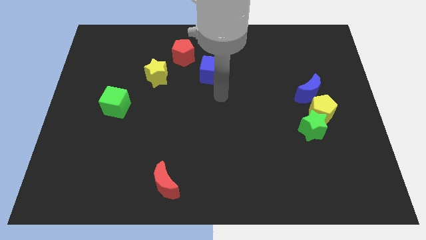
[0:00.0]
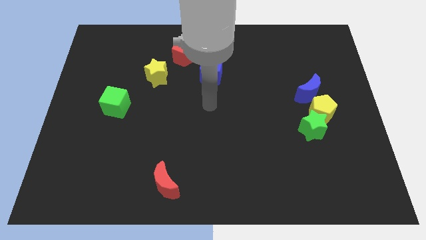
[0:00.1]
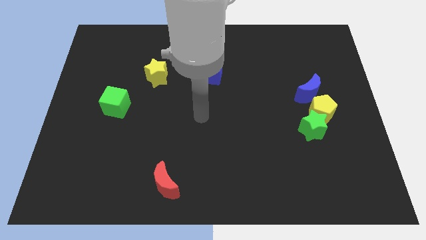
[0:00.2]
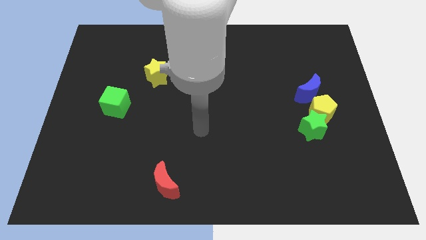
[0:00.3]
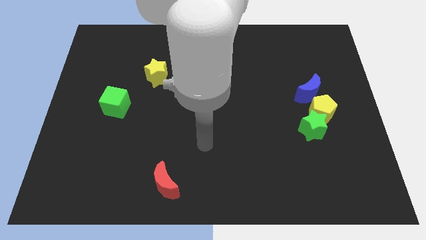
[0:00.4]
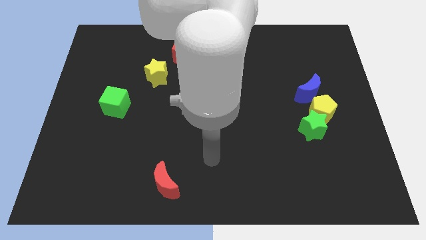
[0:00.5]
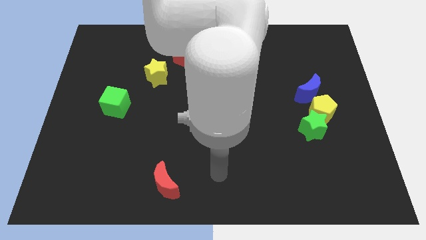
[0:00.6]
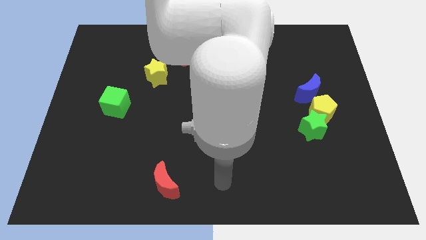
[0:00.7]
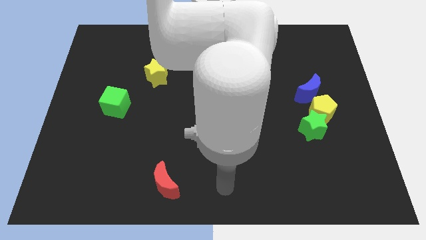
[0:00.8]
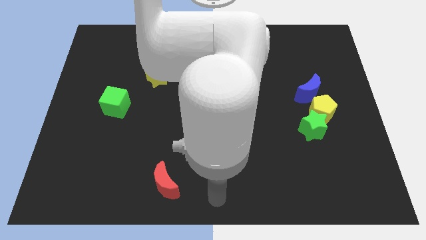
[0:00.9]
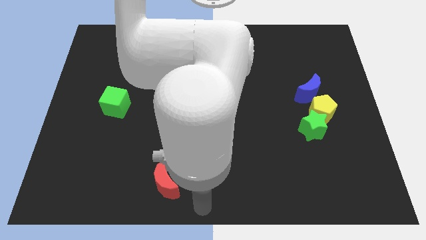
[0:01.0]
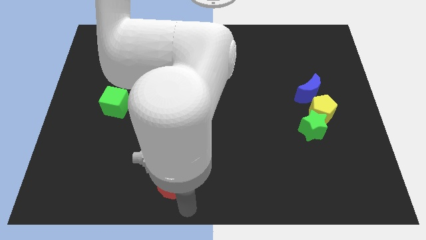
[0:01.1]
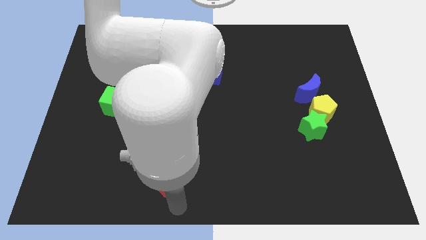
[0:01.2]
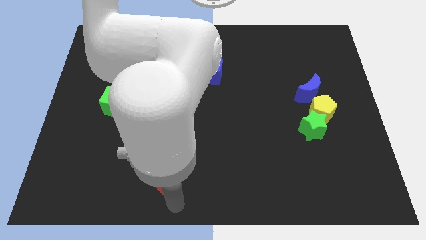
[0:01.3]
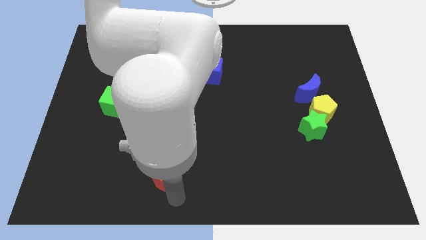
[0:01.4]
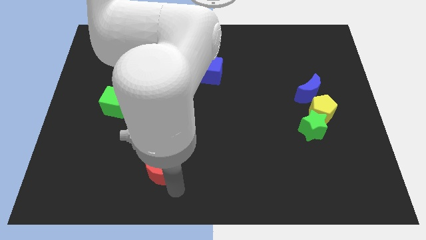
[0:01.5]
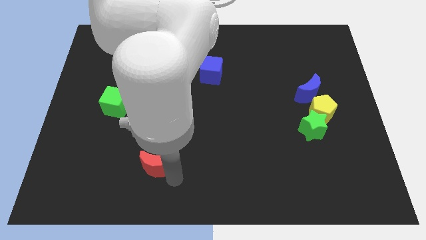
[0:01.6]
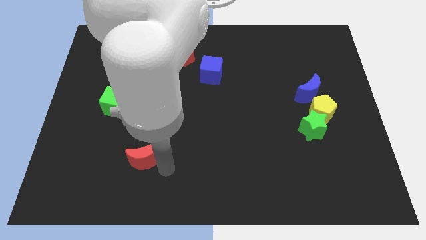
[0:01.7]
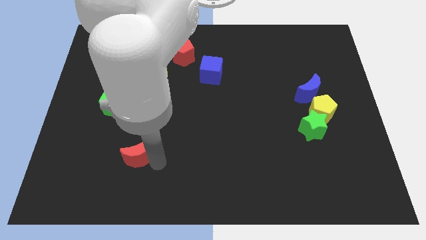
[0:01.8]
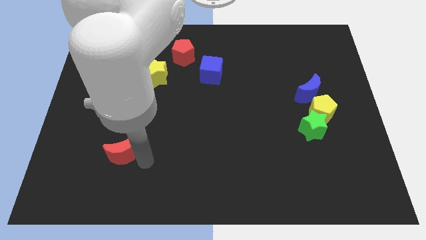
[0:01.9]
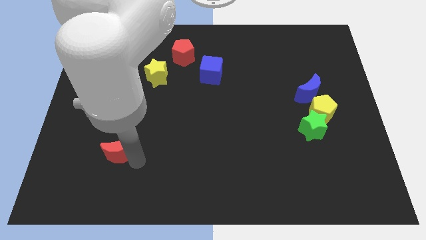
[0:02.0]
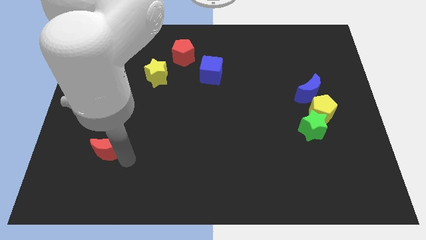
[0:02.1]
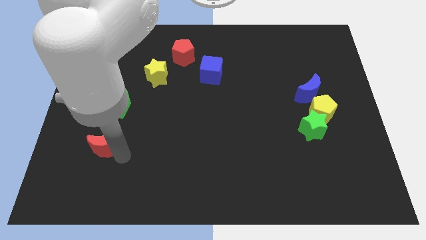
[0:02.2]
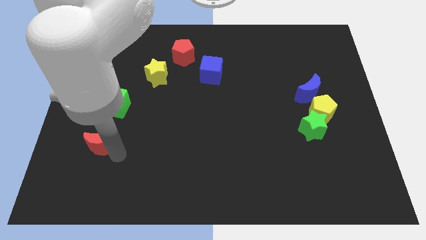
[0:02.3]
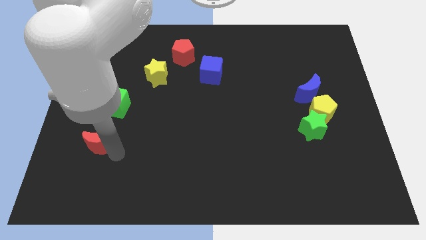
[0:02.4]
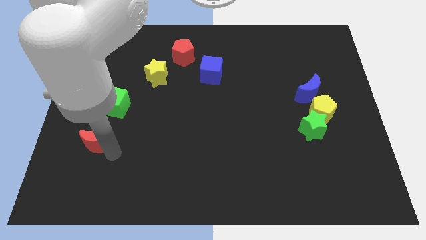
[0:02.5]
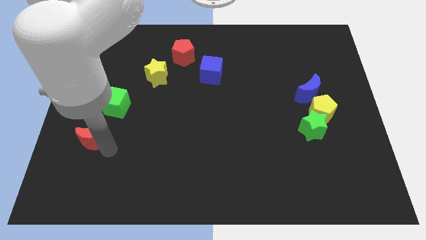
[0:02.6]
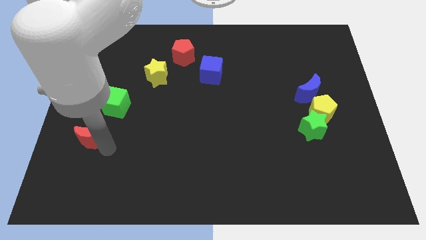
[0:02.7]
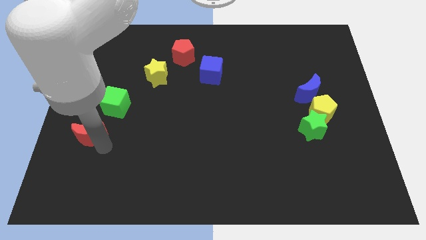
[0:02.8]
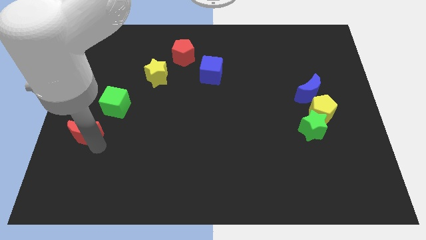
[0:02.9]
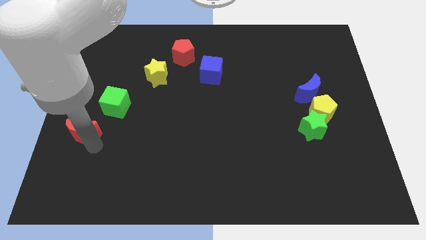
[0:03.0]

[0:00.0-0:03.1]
place the red moon below the green cube

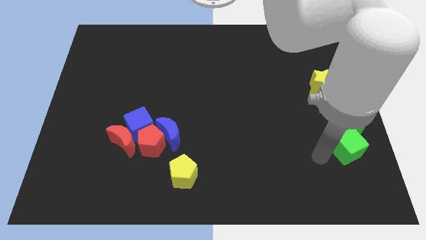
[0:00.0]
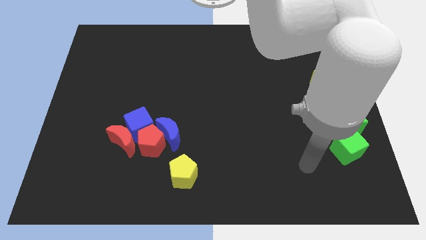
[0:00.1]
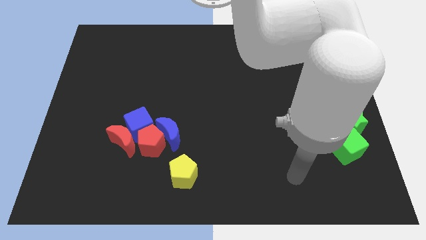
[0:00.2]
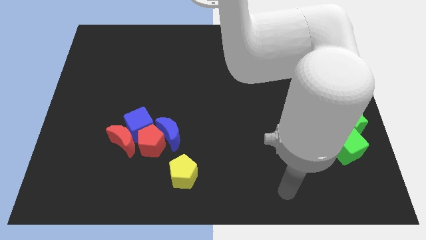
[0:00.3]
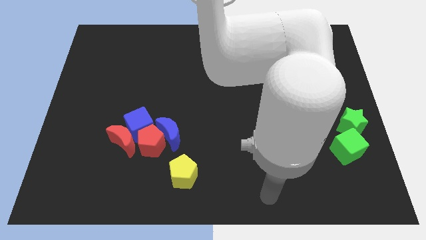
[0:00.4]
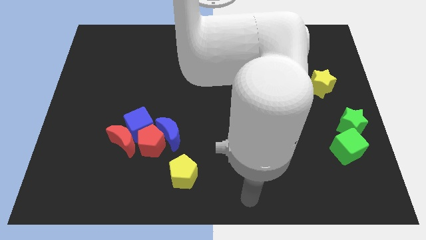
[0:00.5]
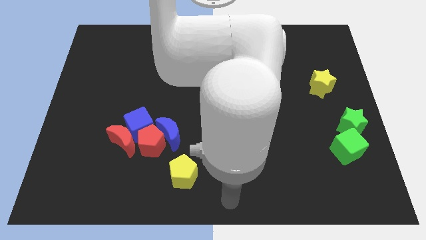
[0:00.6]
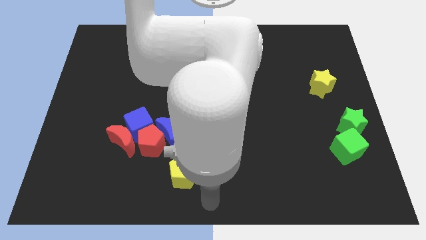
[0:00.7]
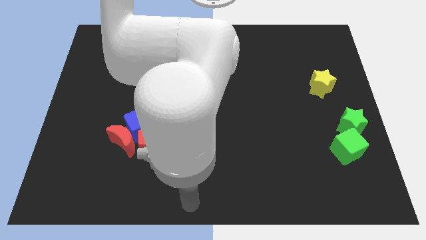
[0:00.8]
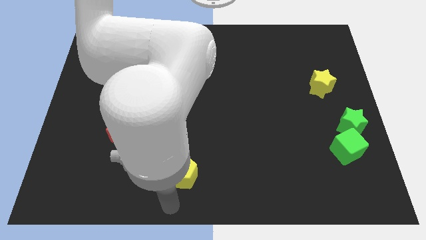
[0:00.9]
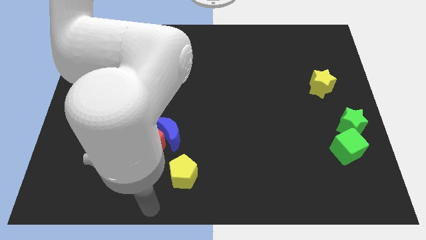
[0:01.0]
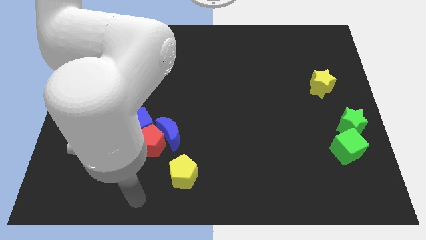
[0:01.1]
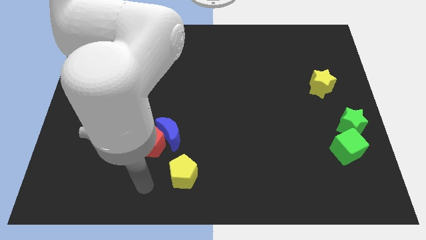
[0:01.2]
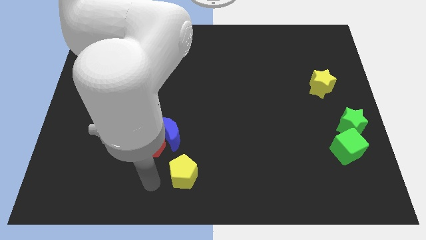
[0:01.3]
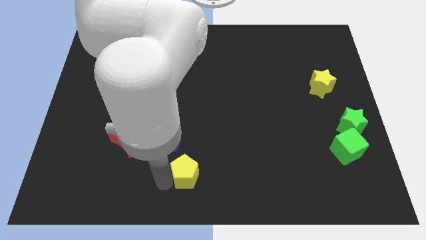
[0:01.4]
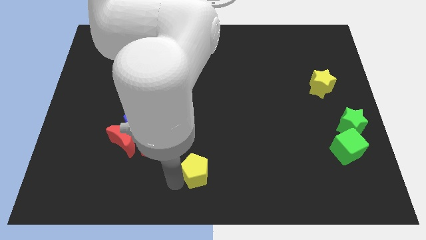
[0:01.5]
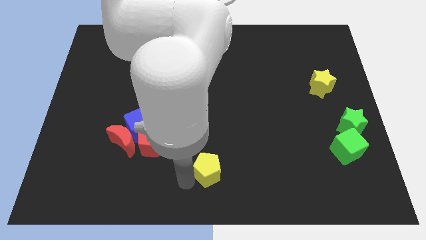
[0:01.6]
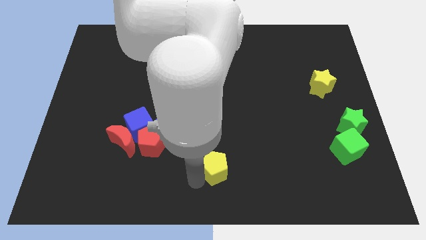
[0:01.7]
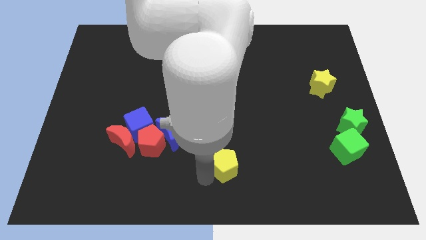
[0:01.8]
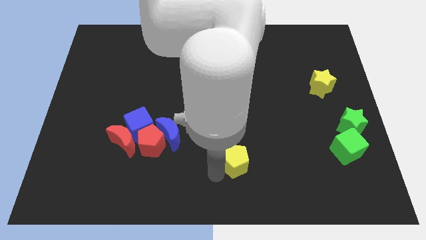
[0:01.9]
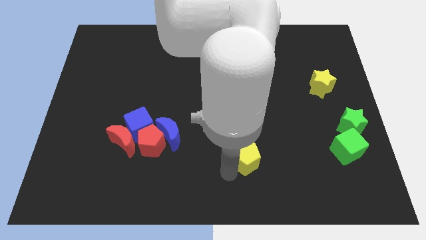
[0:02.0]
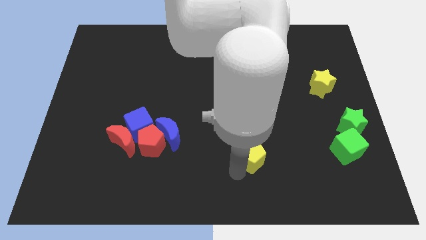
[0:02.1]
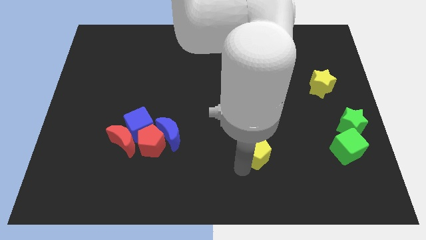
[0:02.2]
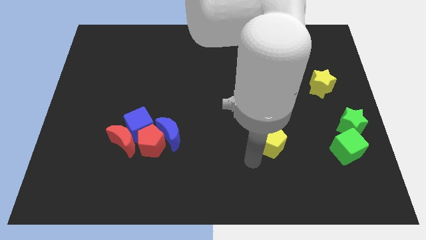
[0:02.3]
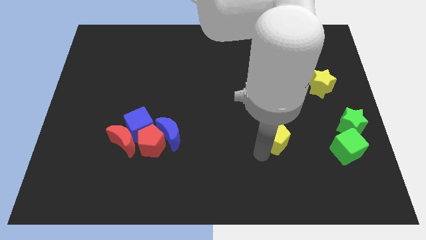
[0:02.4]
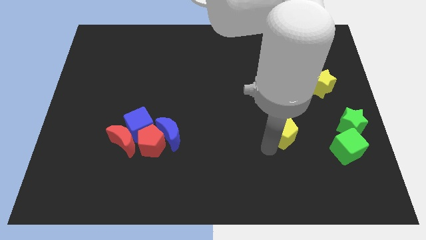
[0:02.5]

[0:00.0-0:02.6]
move the yellow pentagon to the left of the green cube

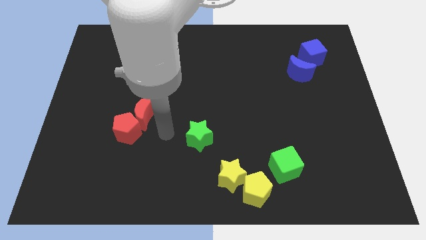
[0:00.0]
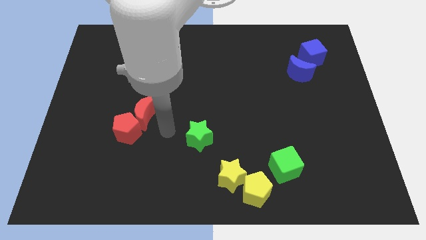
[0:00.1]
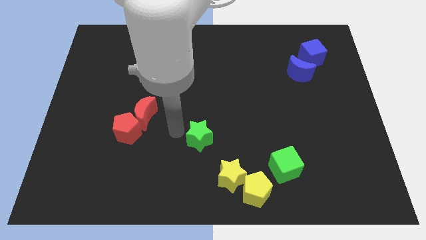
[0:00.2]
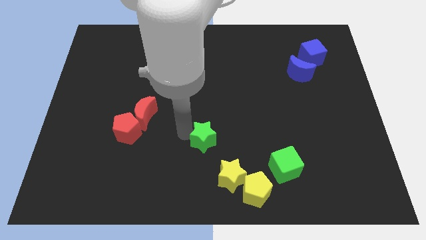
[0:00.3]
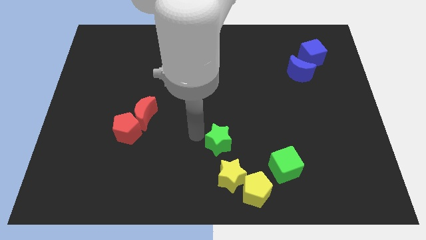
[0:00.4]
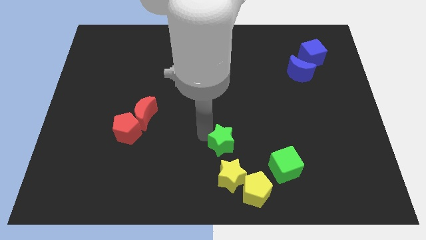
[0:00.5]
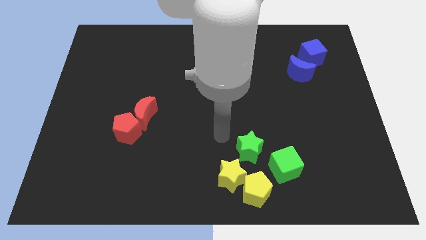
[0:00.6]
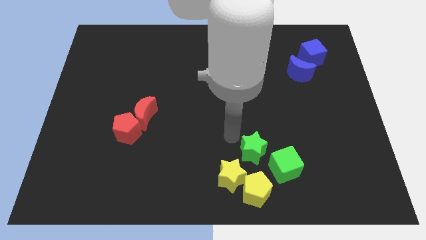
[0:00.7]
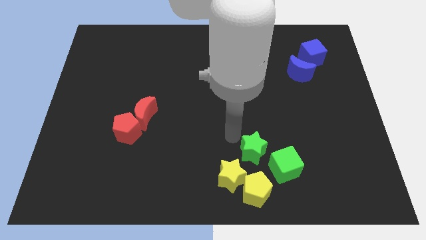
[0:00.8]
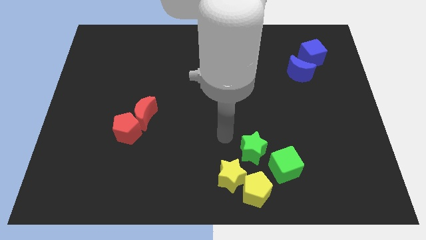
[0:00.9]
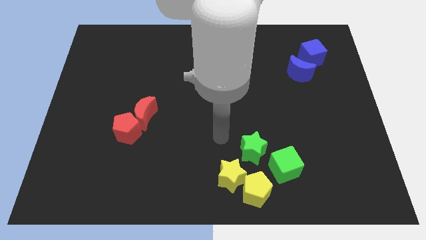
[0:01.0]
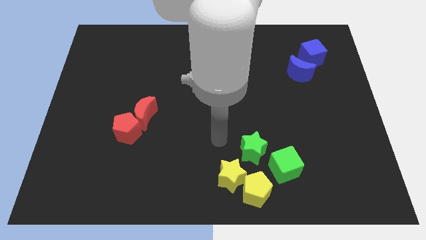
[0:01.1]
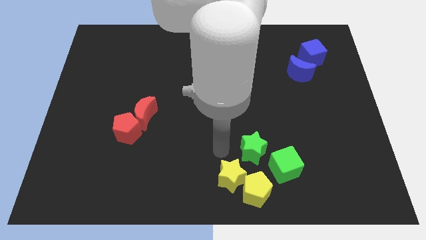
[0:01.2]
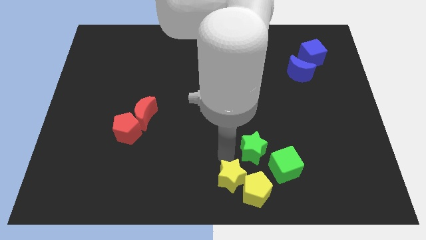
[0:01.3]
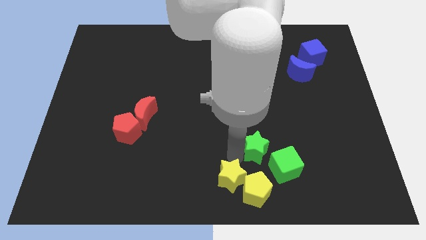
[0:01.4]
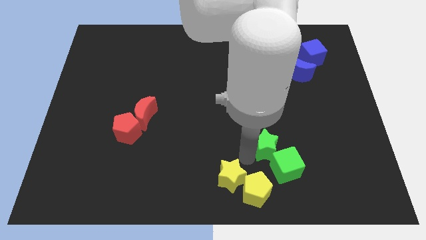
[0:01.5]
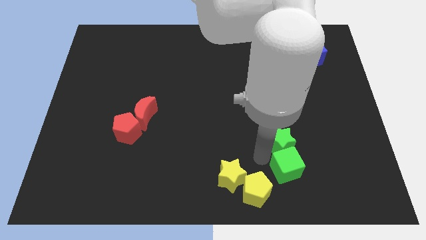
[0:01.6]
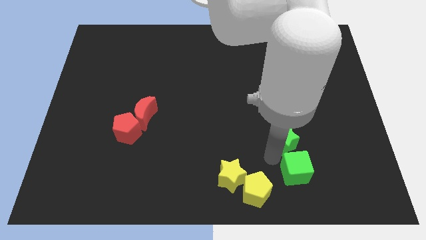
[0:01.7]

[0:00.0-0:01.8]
move the green star into the green cube

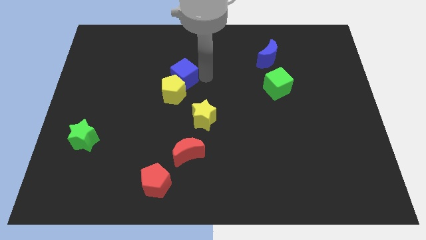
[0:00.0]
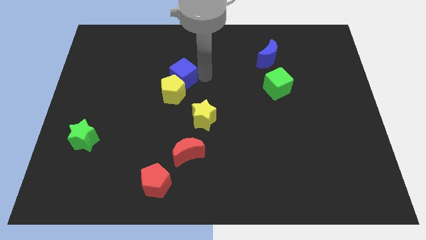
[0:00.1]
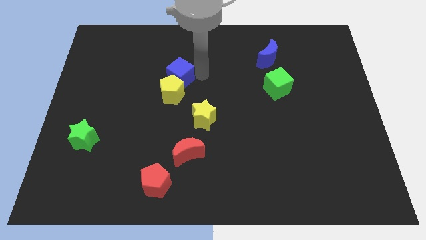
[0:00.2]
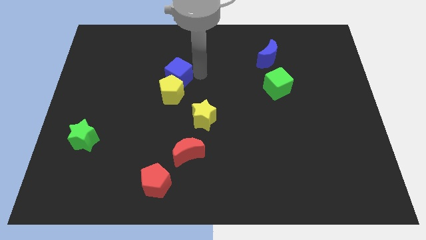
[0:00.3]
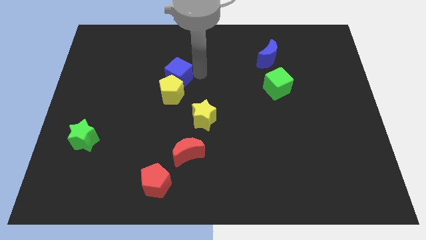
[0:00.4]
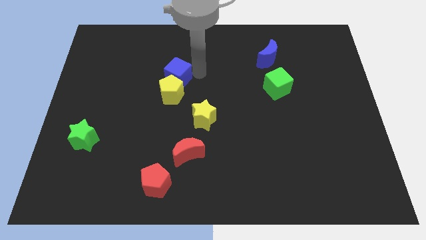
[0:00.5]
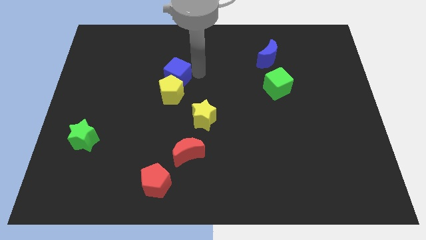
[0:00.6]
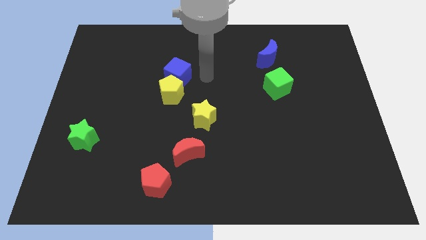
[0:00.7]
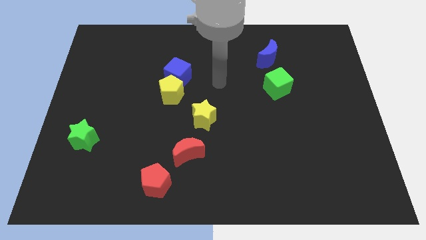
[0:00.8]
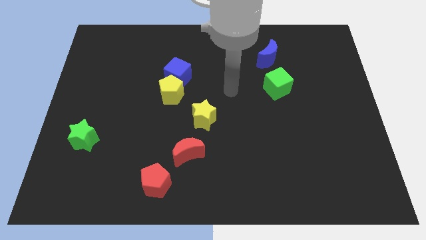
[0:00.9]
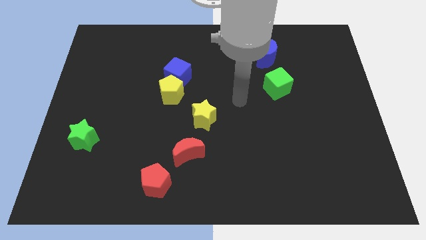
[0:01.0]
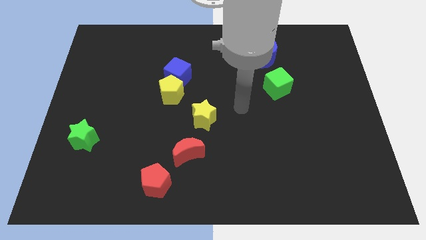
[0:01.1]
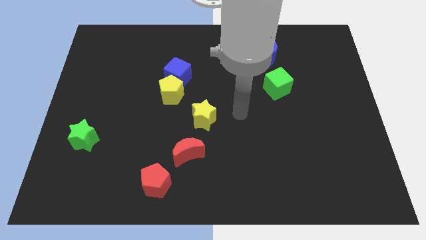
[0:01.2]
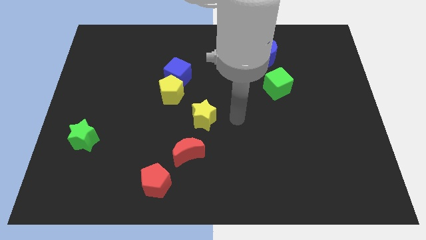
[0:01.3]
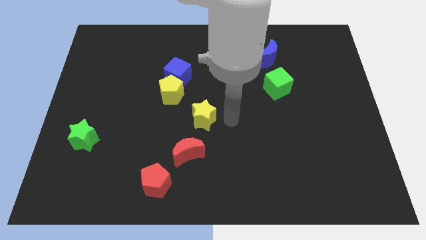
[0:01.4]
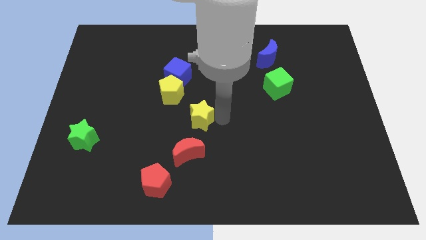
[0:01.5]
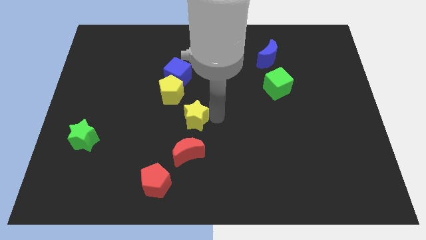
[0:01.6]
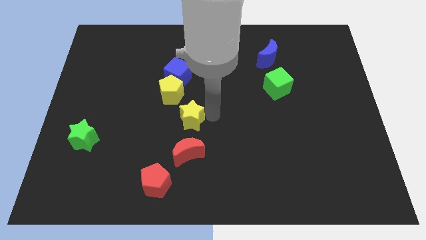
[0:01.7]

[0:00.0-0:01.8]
move yellow pentagon with blue cube
